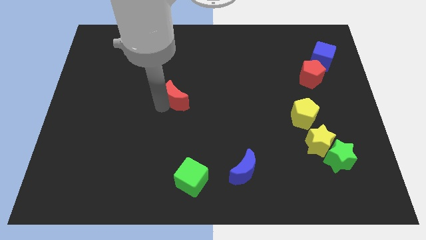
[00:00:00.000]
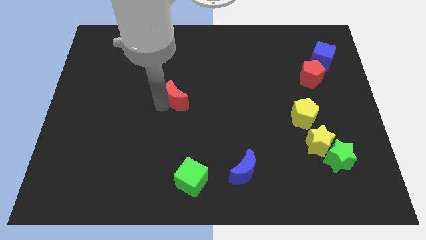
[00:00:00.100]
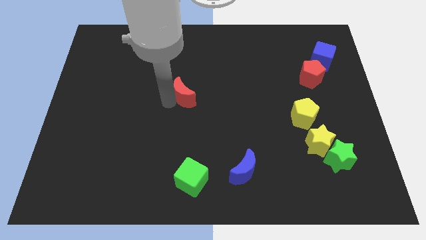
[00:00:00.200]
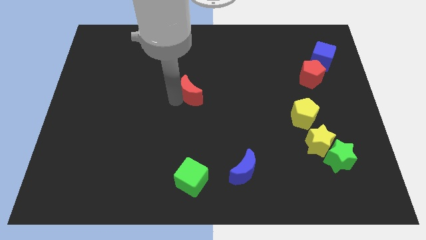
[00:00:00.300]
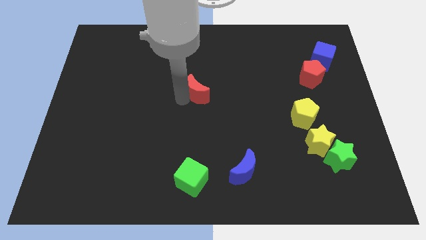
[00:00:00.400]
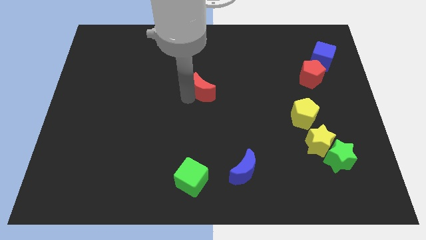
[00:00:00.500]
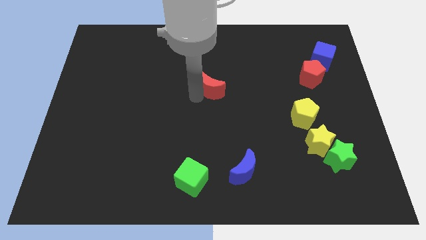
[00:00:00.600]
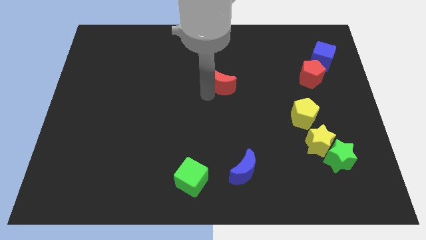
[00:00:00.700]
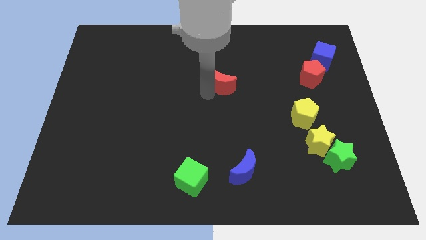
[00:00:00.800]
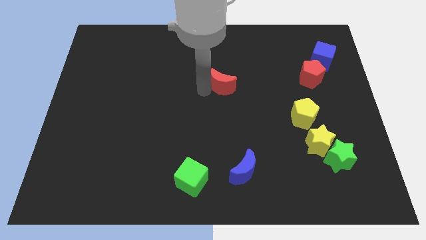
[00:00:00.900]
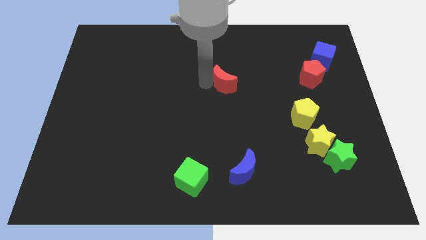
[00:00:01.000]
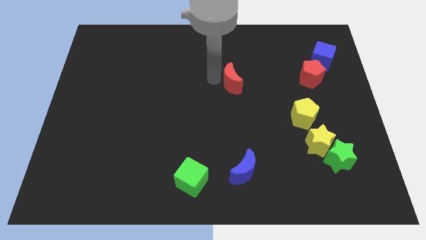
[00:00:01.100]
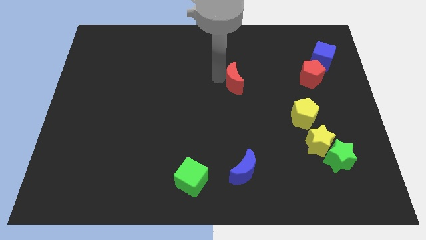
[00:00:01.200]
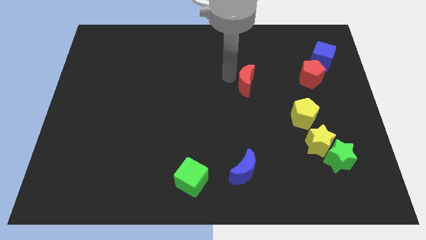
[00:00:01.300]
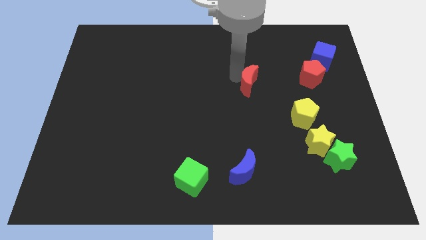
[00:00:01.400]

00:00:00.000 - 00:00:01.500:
place the red moon above the blue moon

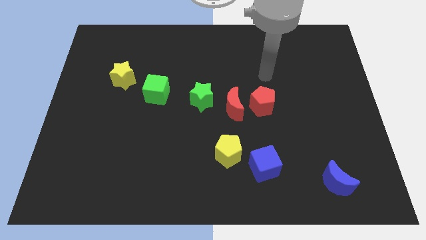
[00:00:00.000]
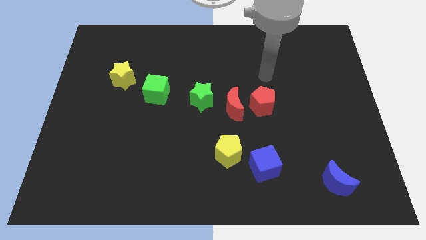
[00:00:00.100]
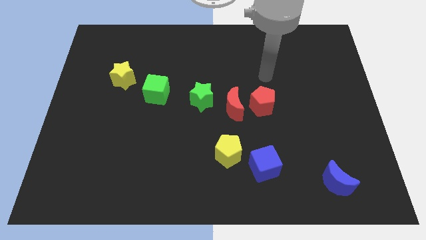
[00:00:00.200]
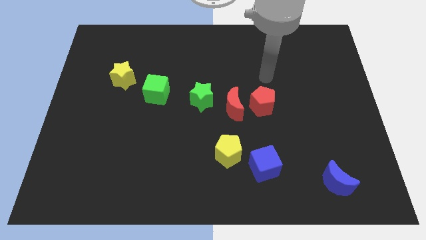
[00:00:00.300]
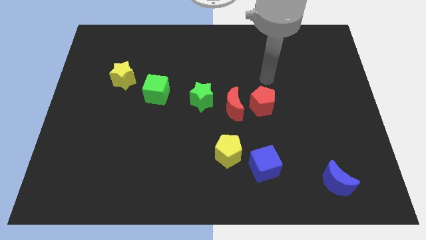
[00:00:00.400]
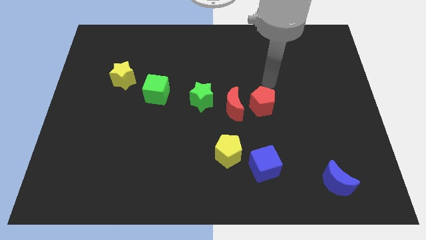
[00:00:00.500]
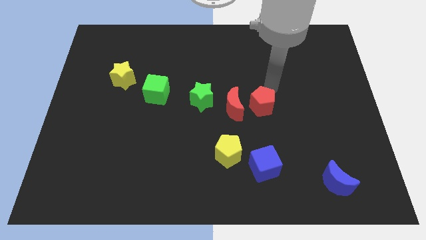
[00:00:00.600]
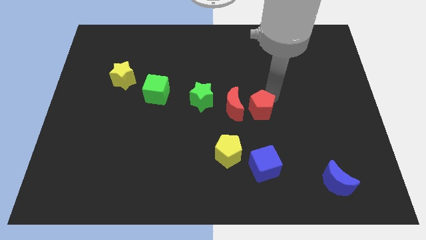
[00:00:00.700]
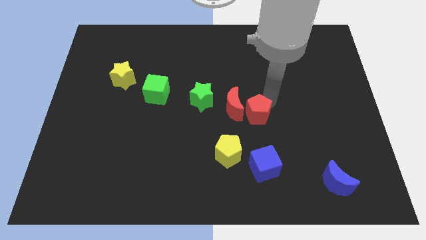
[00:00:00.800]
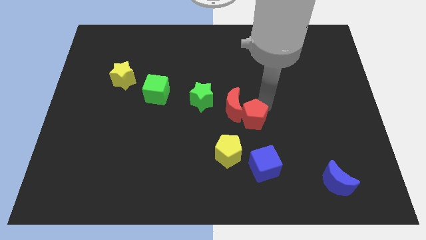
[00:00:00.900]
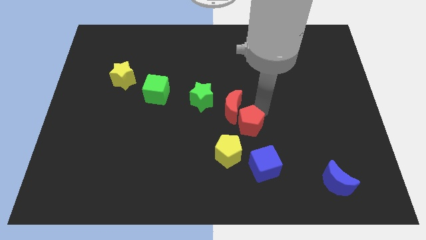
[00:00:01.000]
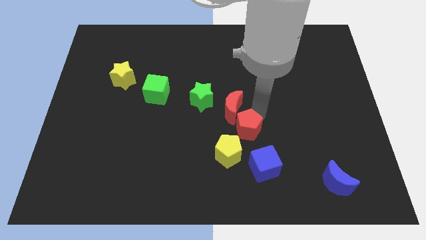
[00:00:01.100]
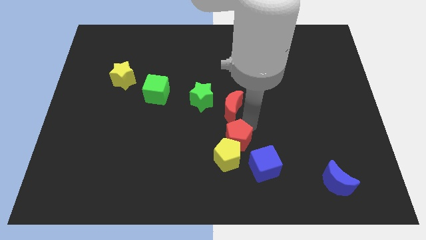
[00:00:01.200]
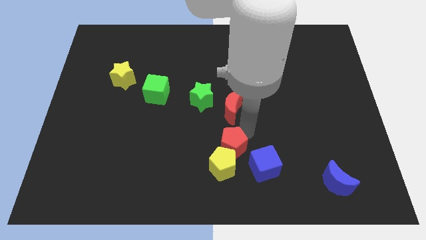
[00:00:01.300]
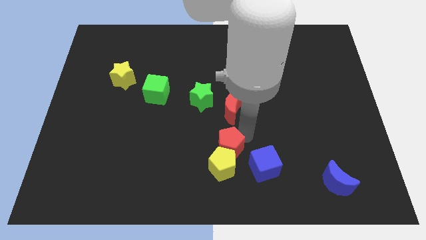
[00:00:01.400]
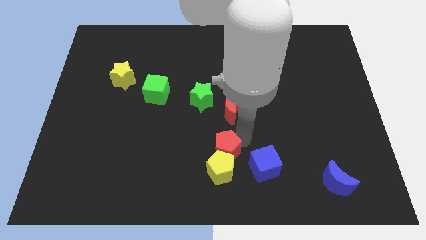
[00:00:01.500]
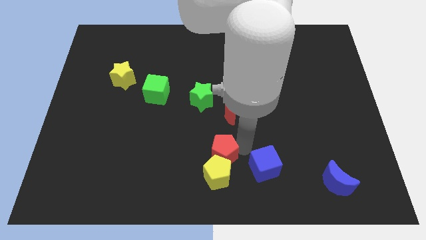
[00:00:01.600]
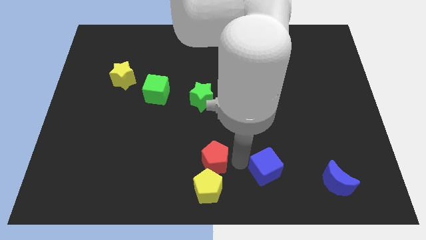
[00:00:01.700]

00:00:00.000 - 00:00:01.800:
push the red pentagon into the yellow pentagon

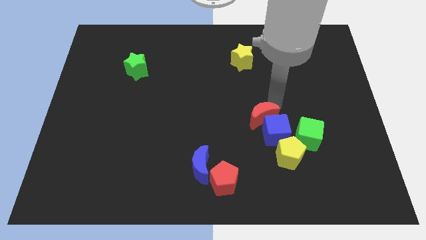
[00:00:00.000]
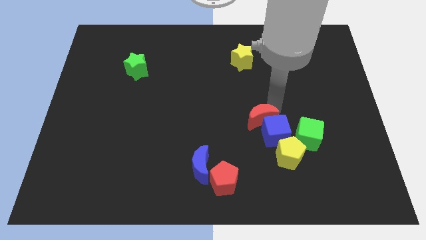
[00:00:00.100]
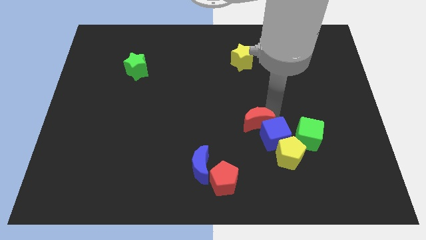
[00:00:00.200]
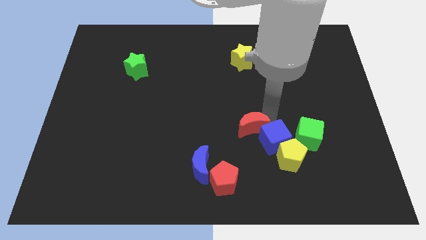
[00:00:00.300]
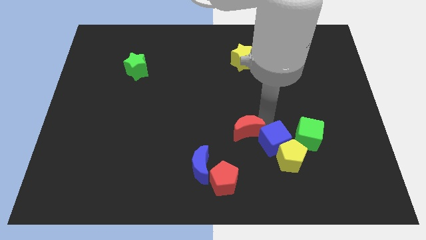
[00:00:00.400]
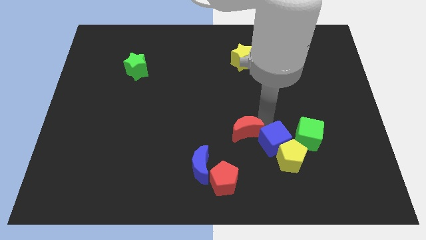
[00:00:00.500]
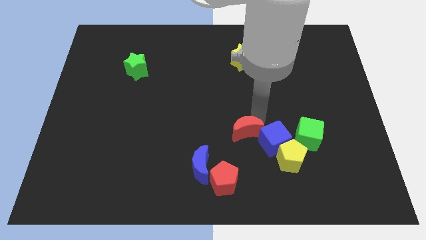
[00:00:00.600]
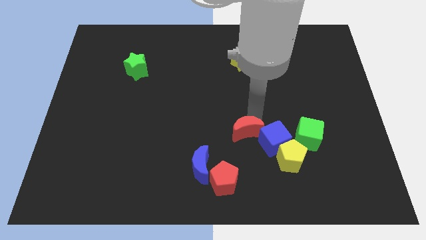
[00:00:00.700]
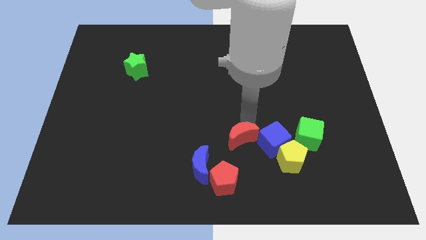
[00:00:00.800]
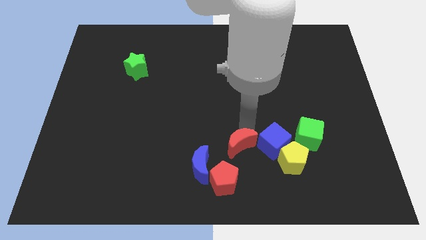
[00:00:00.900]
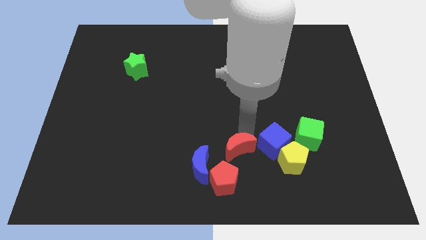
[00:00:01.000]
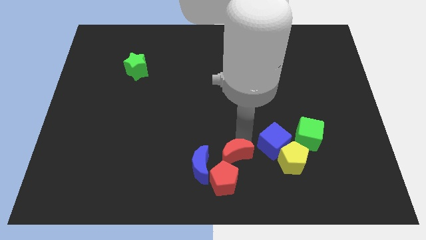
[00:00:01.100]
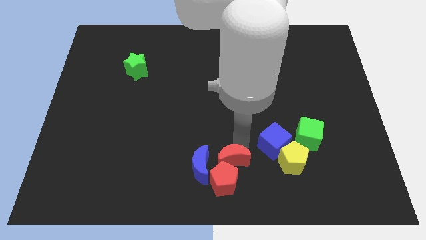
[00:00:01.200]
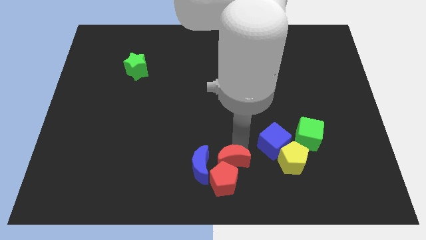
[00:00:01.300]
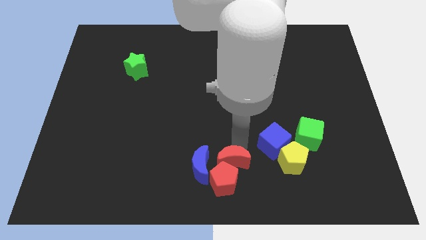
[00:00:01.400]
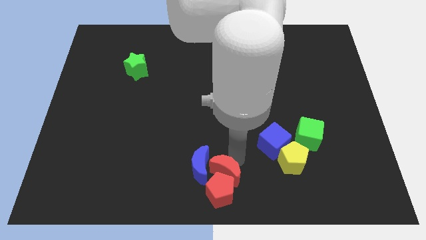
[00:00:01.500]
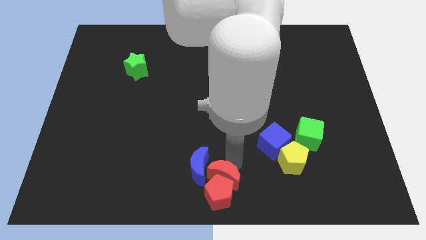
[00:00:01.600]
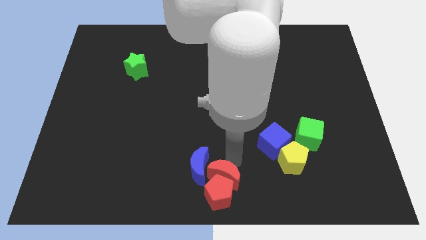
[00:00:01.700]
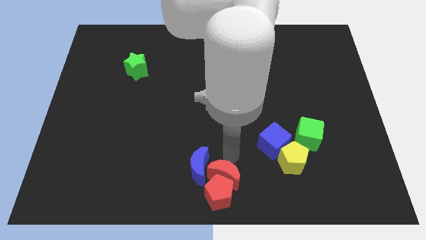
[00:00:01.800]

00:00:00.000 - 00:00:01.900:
push the red crescent into the red pentagon

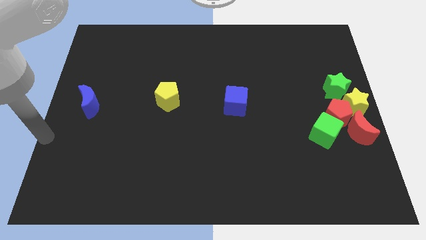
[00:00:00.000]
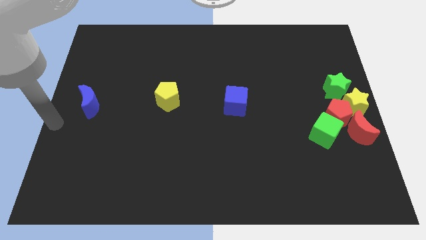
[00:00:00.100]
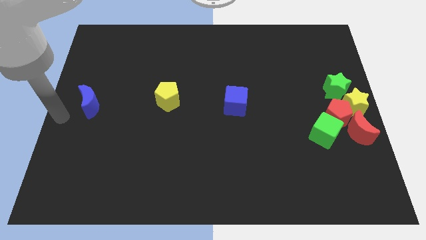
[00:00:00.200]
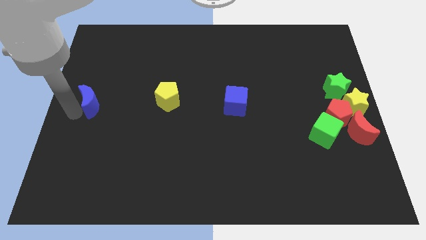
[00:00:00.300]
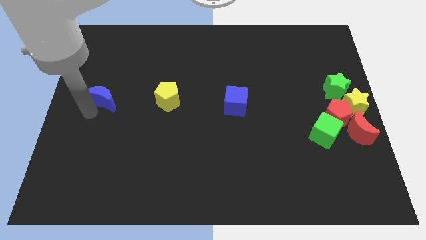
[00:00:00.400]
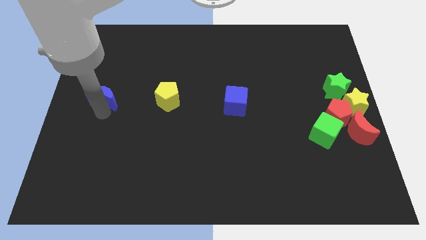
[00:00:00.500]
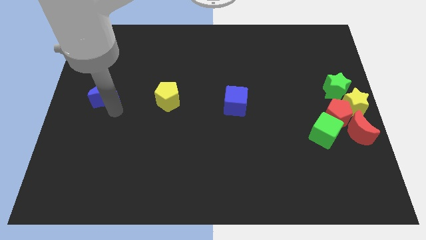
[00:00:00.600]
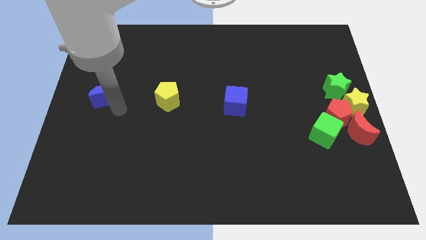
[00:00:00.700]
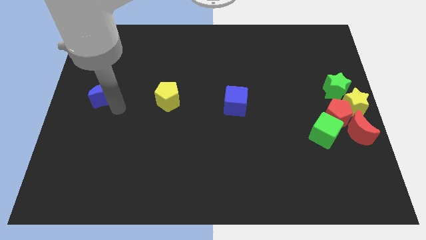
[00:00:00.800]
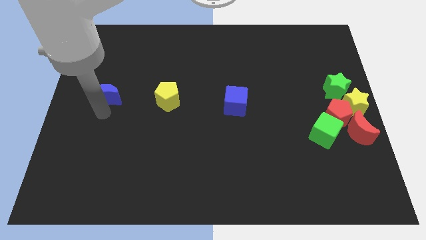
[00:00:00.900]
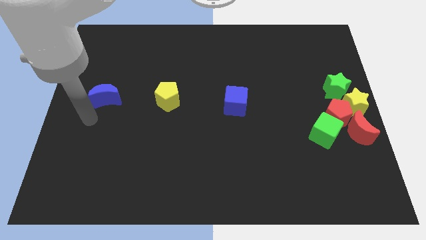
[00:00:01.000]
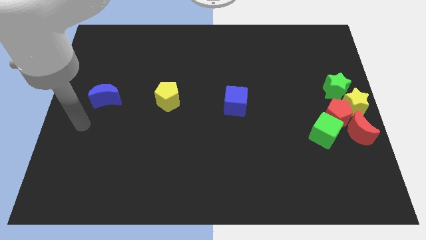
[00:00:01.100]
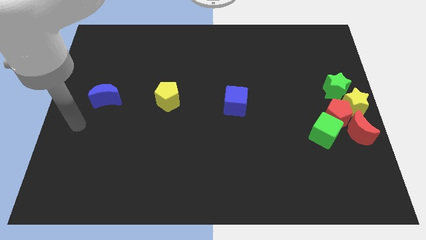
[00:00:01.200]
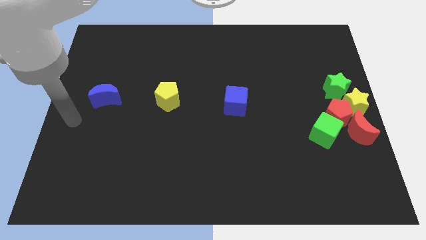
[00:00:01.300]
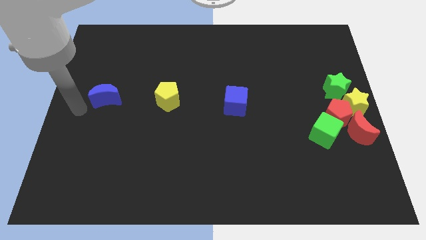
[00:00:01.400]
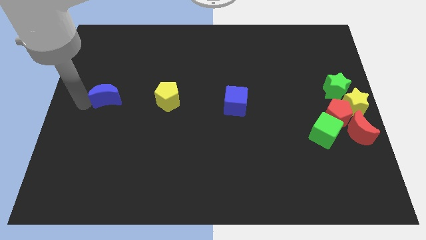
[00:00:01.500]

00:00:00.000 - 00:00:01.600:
slide the blue moon slightly to the right

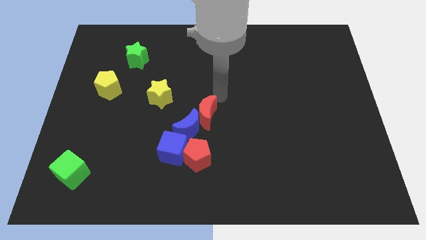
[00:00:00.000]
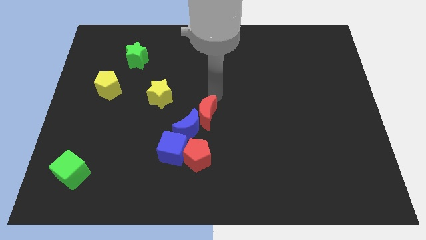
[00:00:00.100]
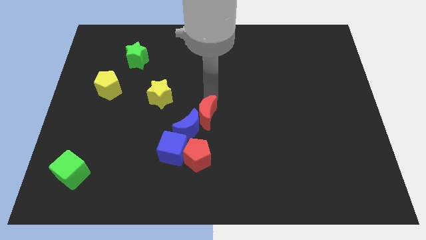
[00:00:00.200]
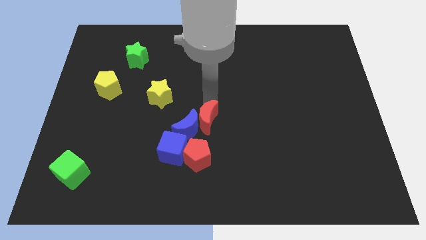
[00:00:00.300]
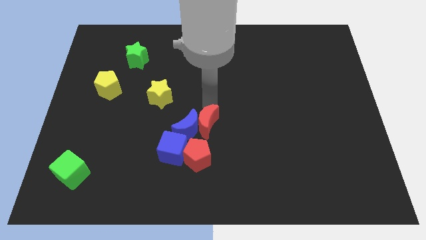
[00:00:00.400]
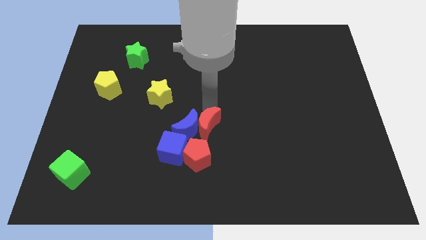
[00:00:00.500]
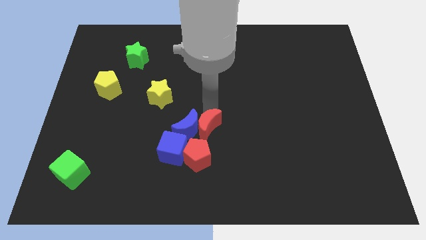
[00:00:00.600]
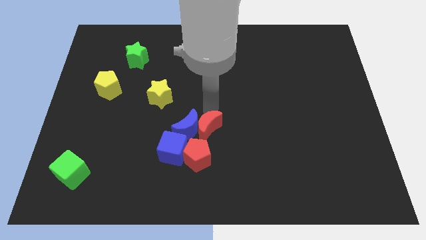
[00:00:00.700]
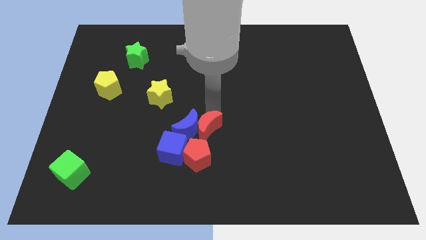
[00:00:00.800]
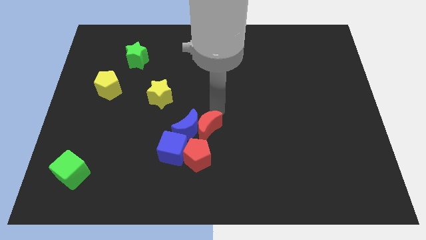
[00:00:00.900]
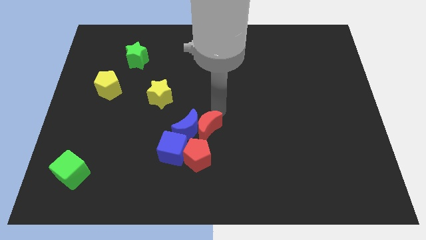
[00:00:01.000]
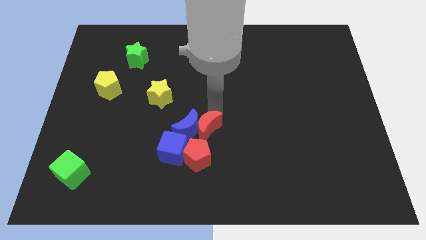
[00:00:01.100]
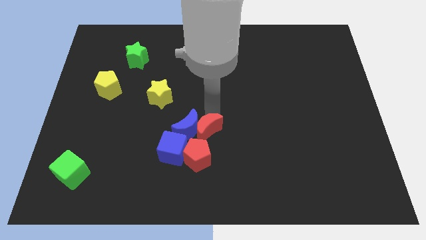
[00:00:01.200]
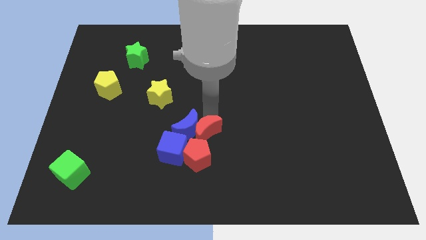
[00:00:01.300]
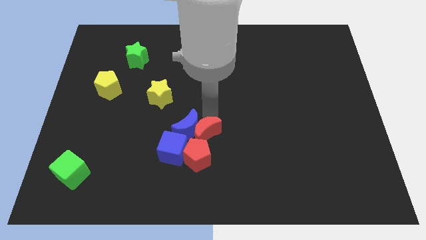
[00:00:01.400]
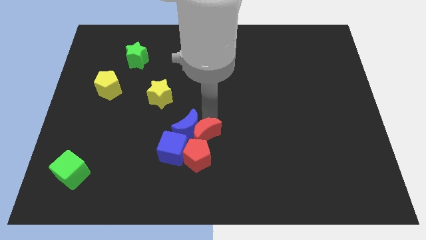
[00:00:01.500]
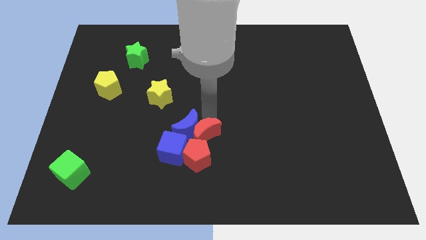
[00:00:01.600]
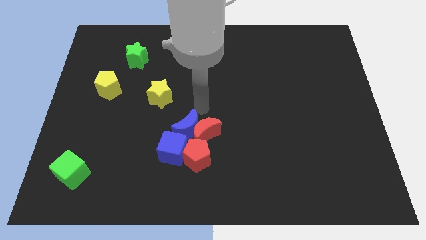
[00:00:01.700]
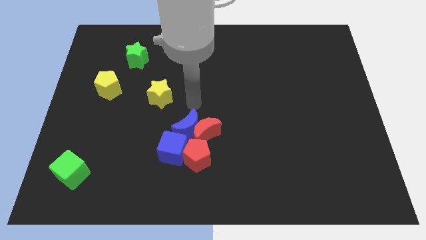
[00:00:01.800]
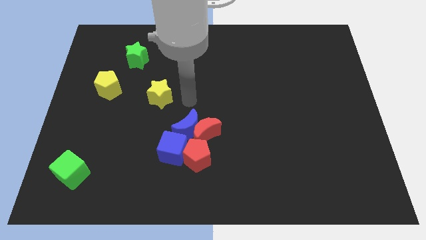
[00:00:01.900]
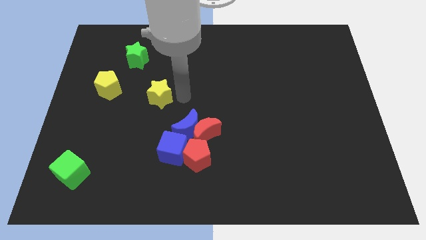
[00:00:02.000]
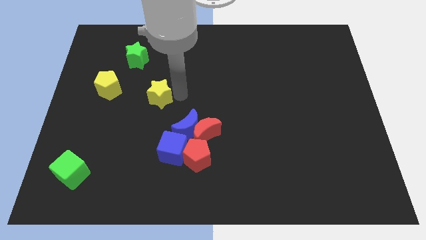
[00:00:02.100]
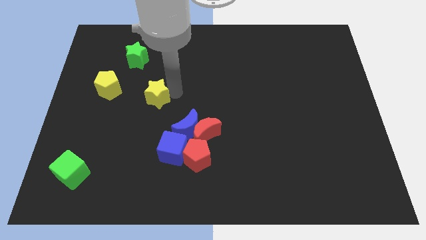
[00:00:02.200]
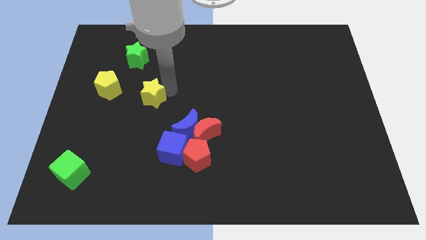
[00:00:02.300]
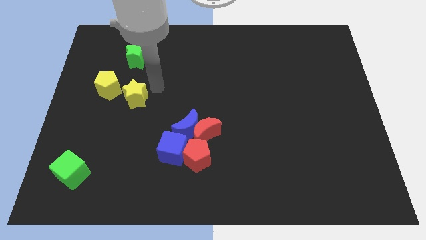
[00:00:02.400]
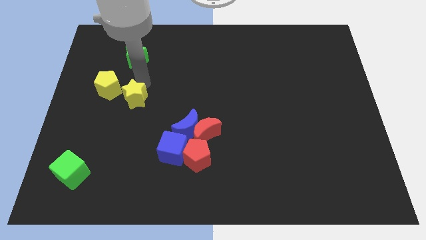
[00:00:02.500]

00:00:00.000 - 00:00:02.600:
push yellow star below green star
